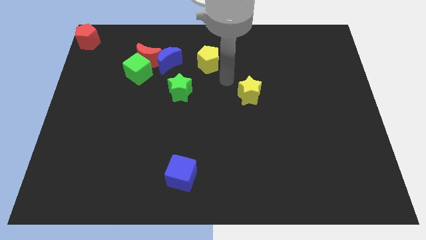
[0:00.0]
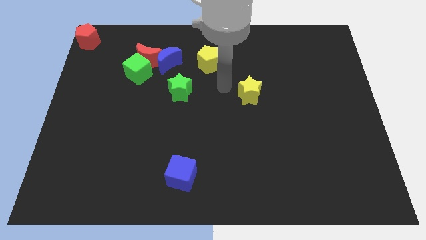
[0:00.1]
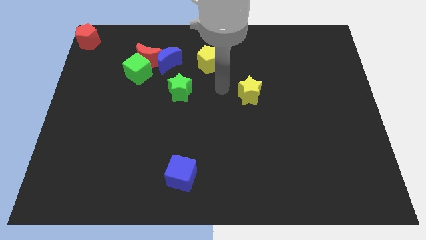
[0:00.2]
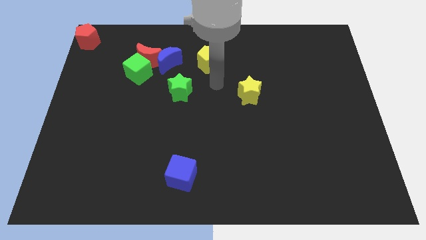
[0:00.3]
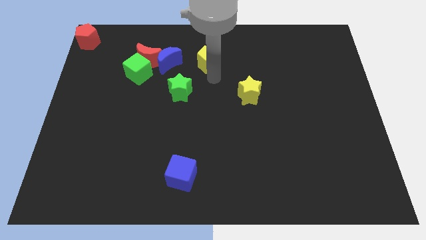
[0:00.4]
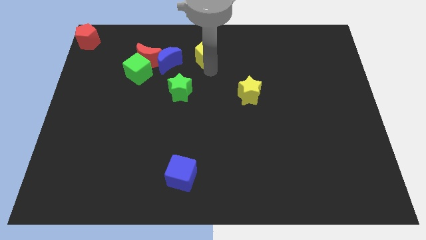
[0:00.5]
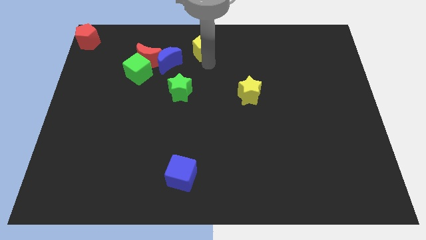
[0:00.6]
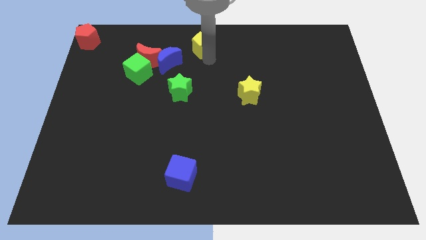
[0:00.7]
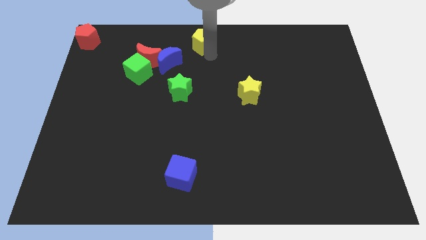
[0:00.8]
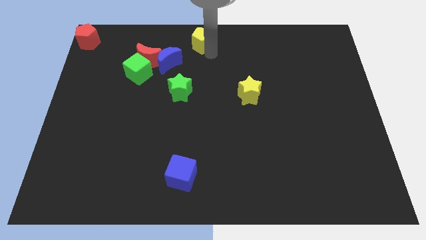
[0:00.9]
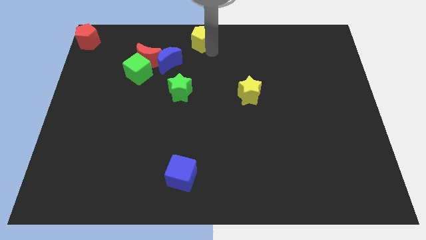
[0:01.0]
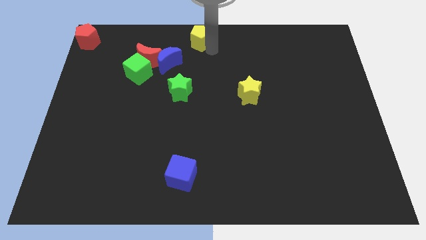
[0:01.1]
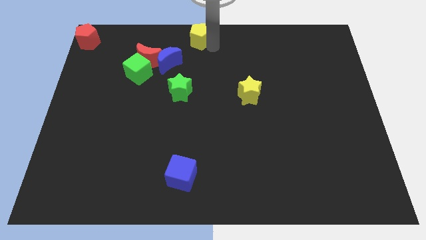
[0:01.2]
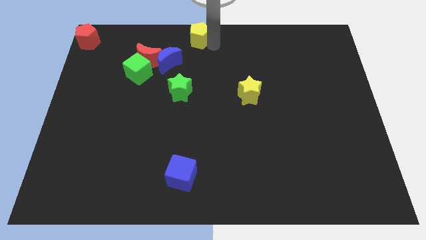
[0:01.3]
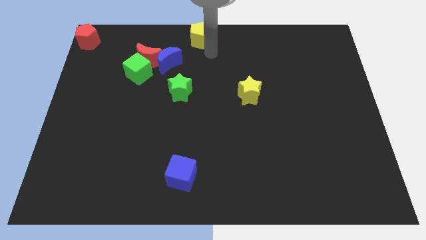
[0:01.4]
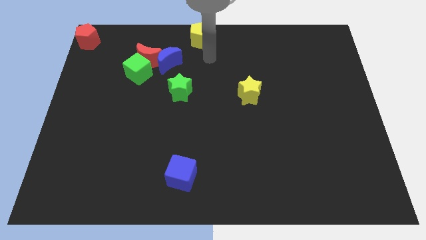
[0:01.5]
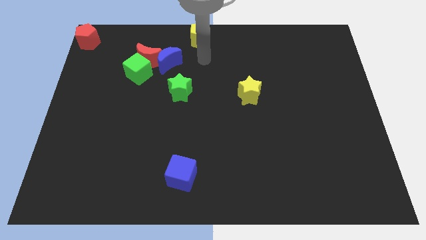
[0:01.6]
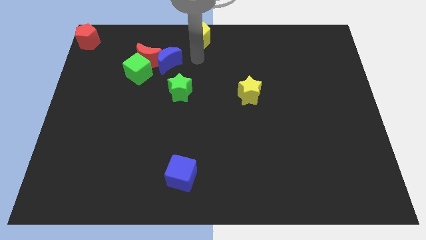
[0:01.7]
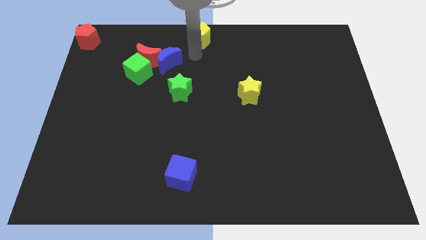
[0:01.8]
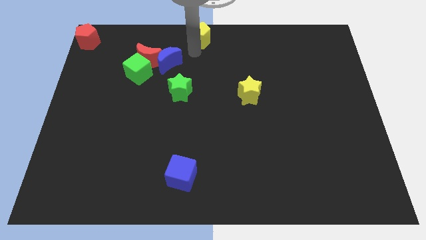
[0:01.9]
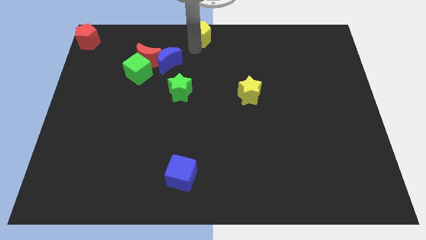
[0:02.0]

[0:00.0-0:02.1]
place yellow pentagon at the top center of the board

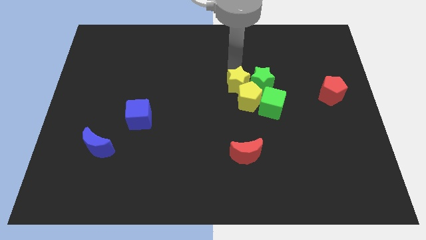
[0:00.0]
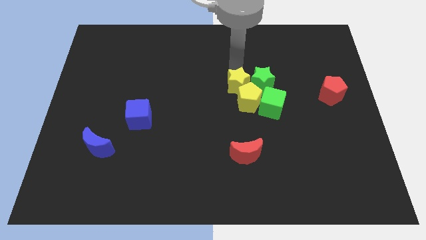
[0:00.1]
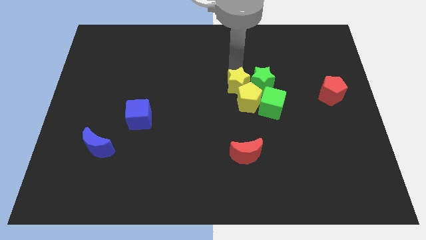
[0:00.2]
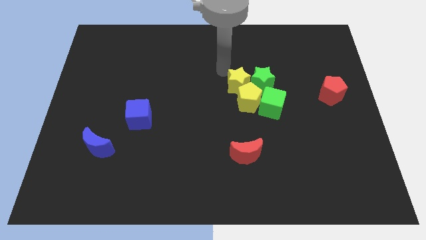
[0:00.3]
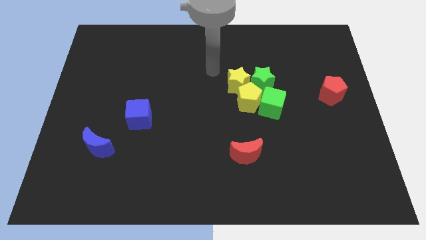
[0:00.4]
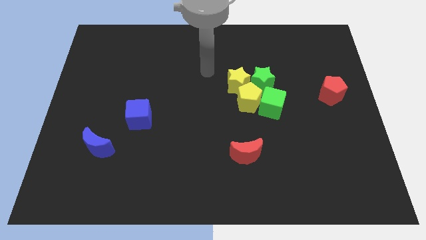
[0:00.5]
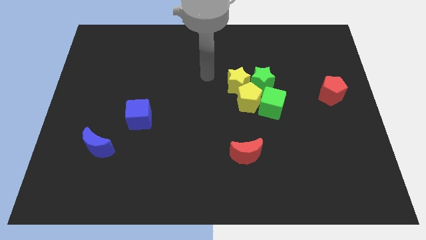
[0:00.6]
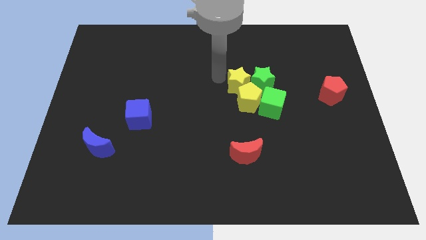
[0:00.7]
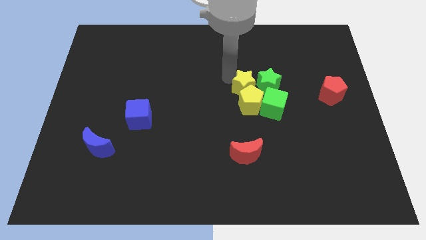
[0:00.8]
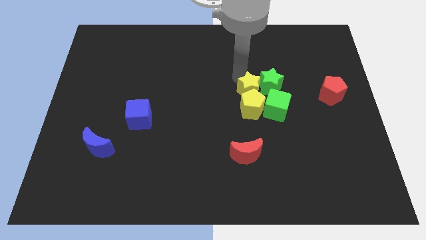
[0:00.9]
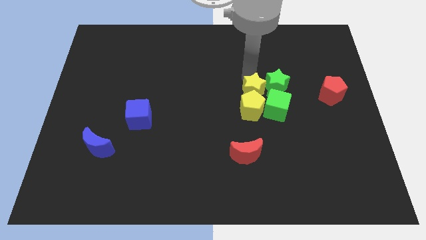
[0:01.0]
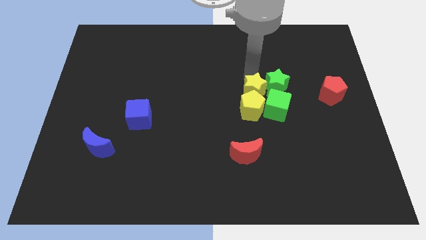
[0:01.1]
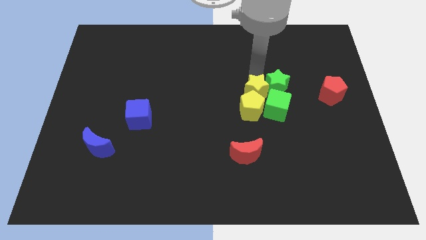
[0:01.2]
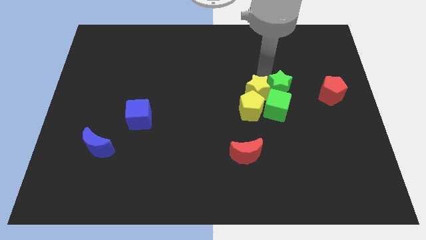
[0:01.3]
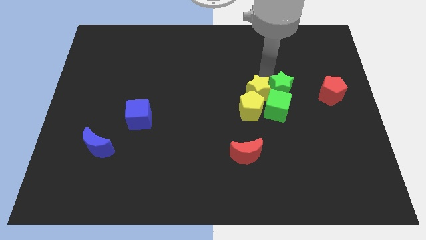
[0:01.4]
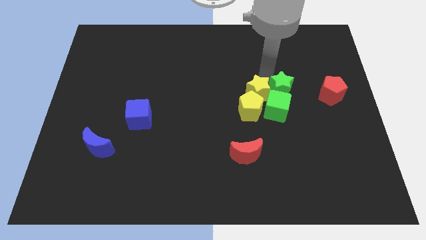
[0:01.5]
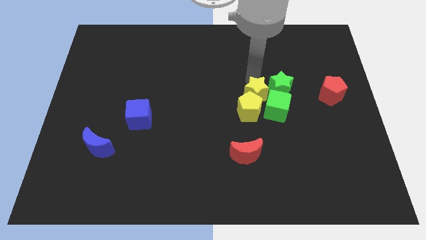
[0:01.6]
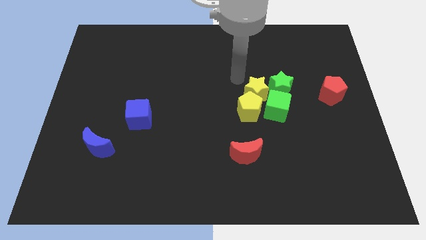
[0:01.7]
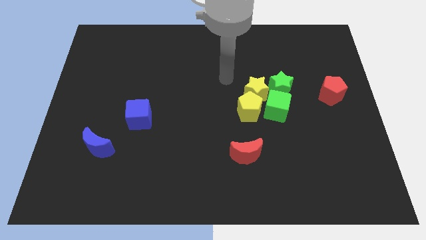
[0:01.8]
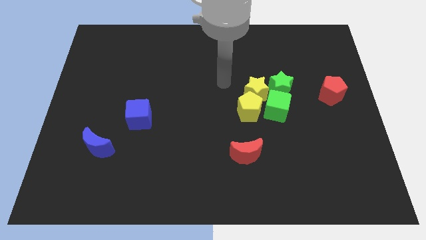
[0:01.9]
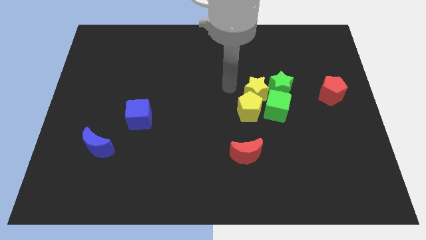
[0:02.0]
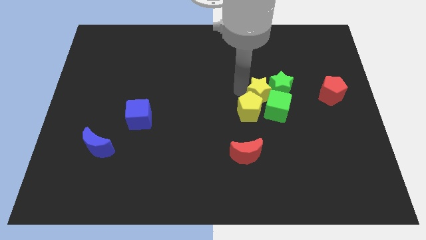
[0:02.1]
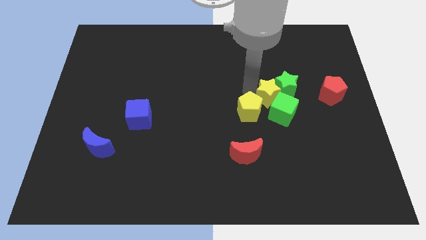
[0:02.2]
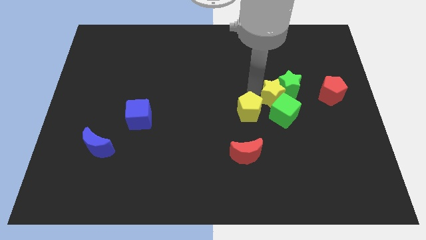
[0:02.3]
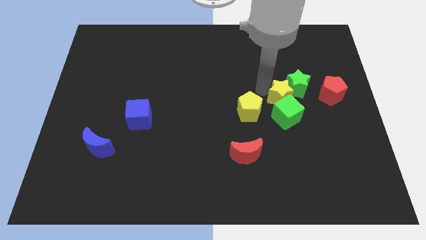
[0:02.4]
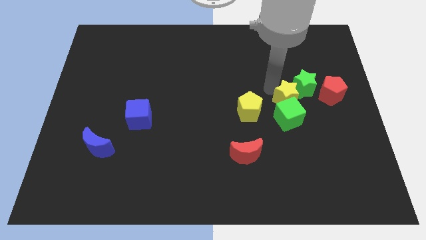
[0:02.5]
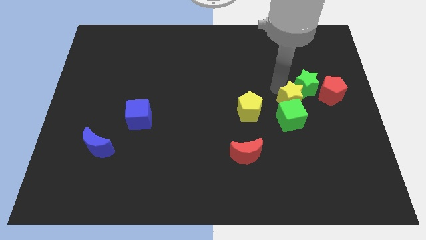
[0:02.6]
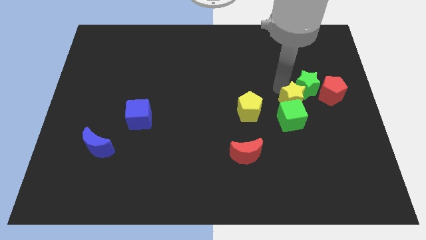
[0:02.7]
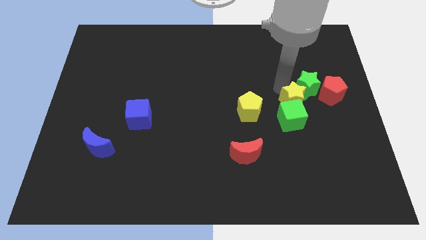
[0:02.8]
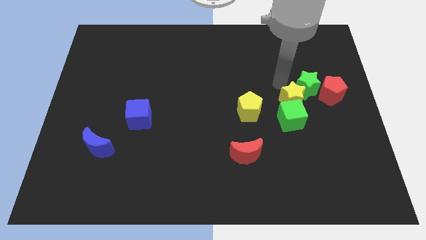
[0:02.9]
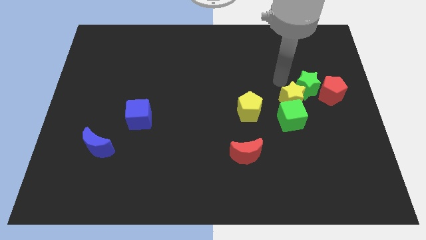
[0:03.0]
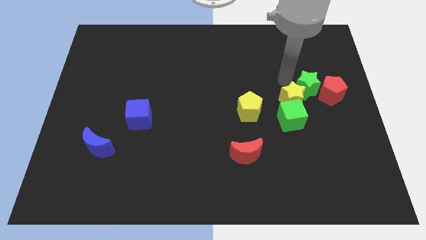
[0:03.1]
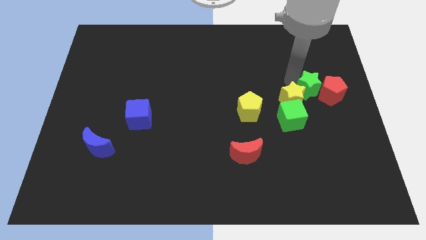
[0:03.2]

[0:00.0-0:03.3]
separate the yellow star green star and green cube from the yellow pentagon

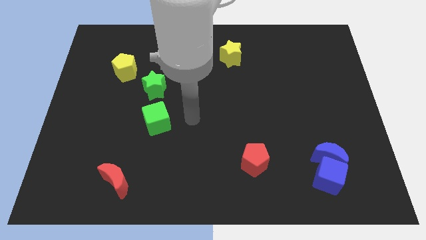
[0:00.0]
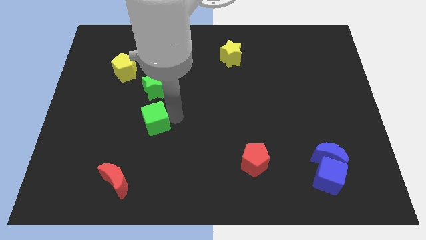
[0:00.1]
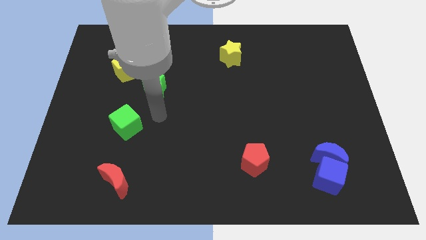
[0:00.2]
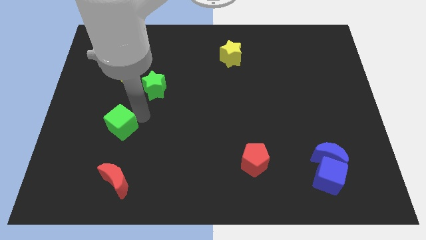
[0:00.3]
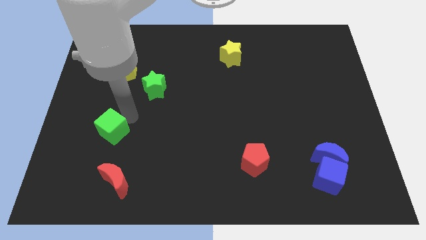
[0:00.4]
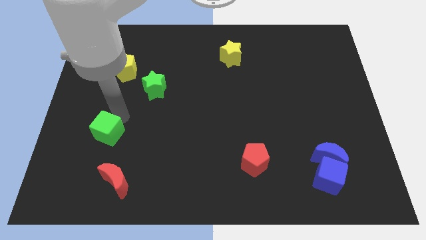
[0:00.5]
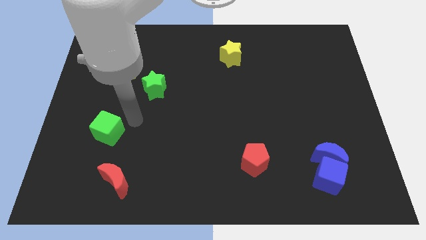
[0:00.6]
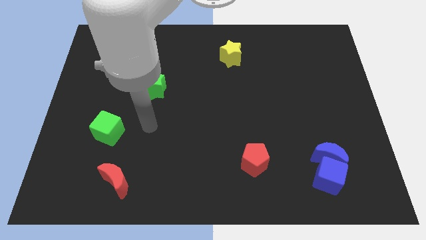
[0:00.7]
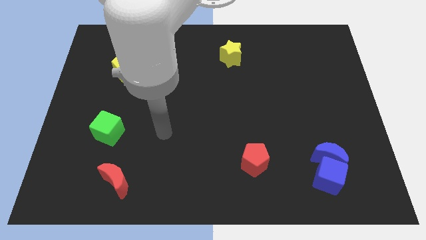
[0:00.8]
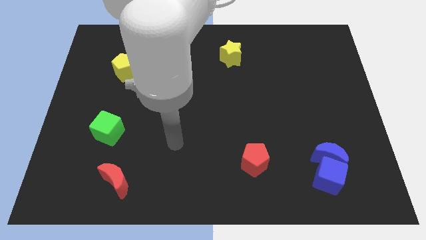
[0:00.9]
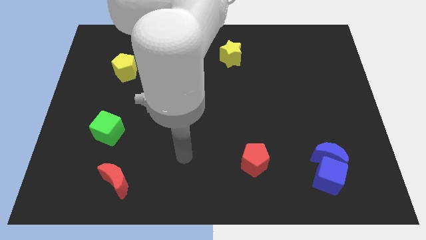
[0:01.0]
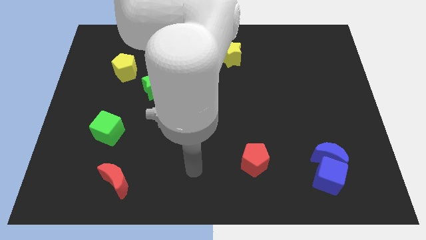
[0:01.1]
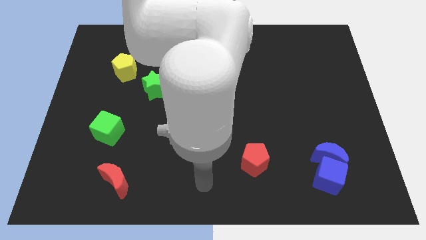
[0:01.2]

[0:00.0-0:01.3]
push the green cube to the top of the red crescent

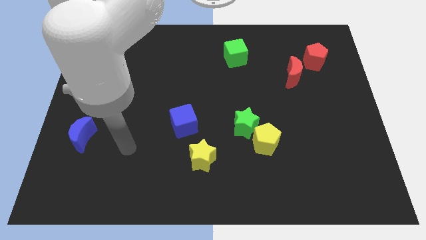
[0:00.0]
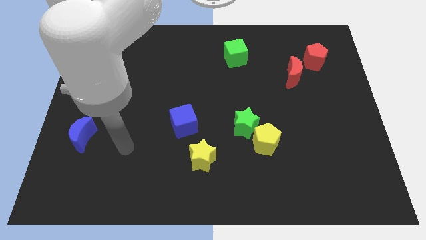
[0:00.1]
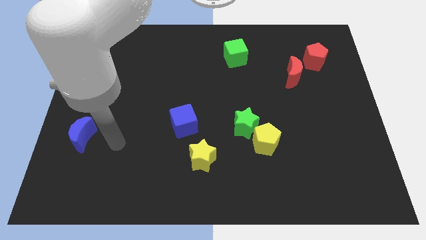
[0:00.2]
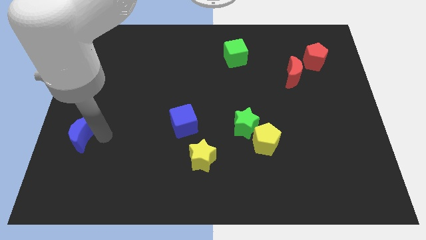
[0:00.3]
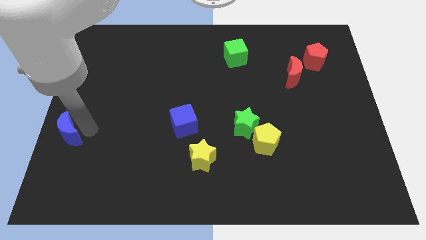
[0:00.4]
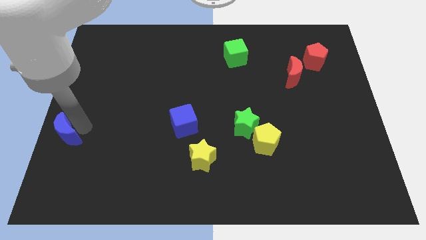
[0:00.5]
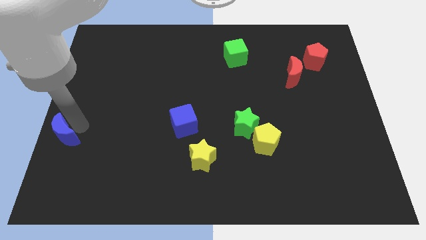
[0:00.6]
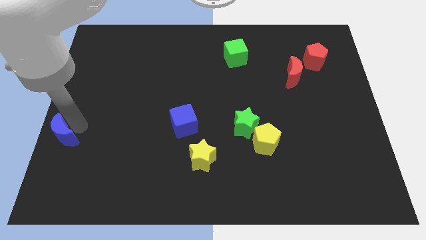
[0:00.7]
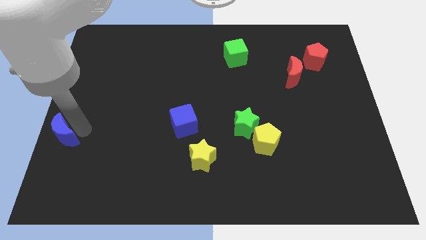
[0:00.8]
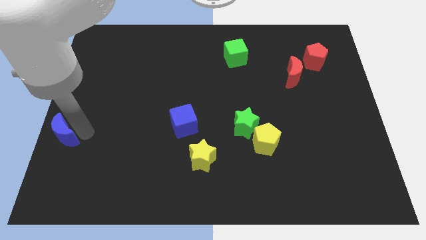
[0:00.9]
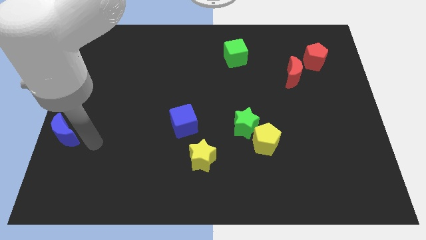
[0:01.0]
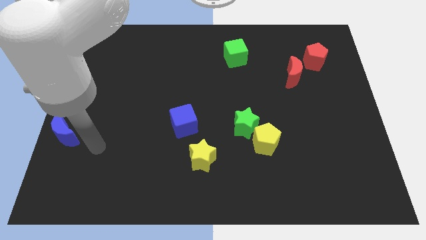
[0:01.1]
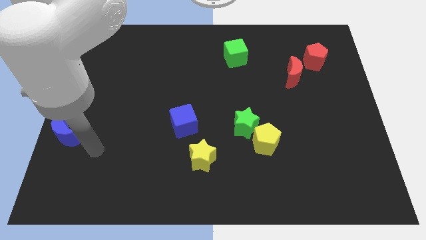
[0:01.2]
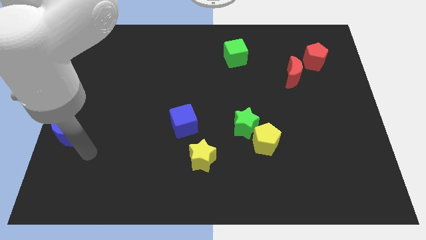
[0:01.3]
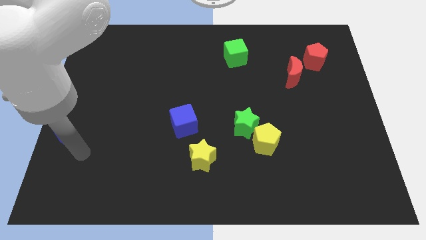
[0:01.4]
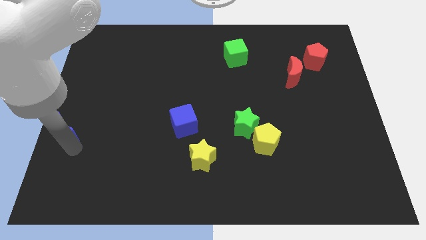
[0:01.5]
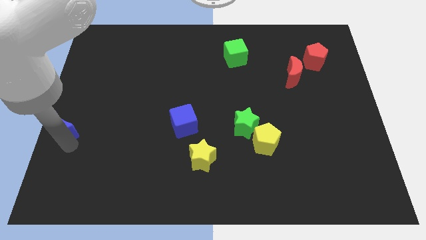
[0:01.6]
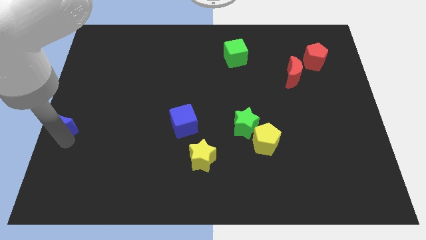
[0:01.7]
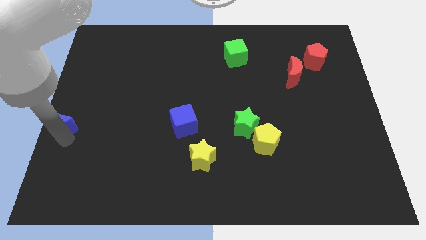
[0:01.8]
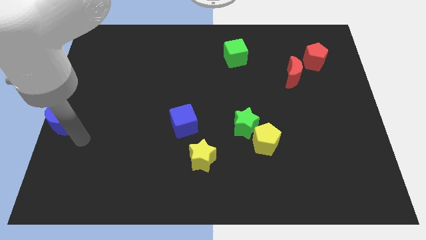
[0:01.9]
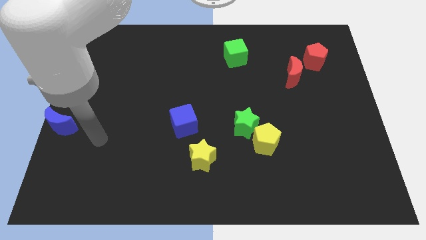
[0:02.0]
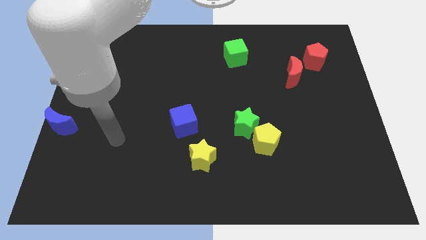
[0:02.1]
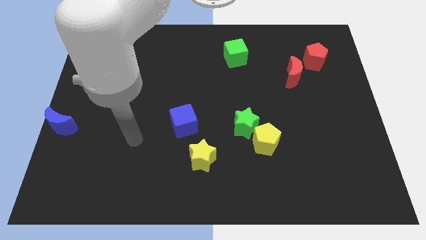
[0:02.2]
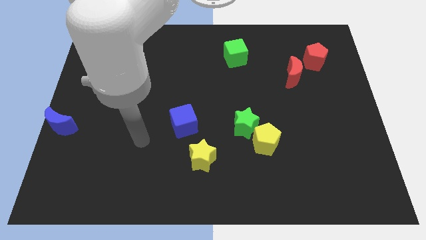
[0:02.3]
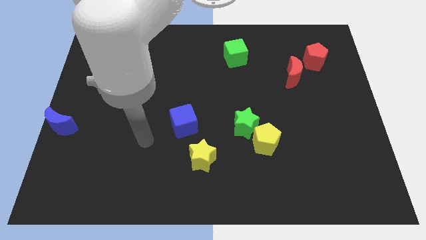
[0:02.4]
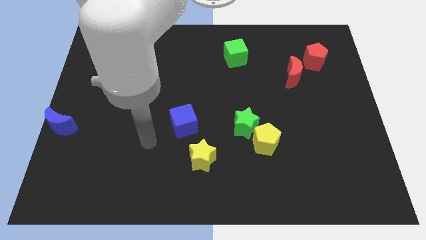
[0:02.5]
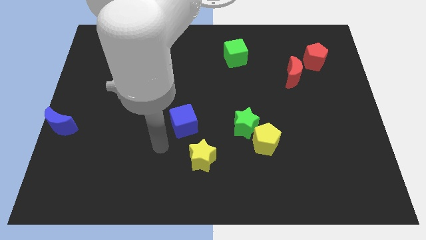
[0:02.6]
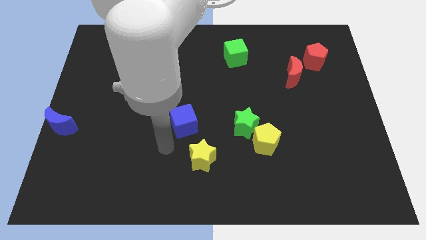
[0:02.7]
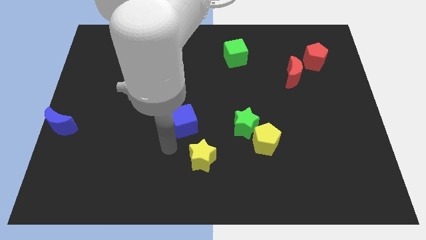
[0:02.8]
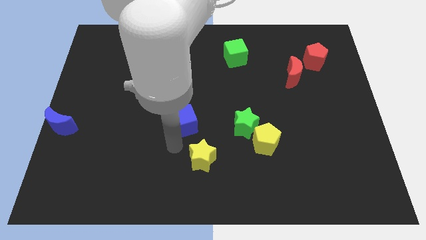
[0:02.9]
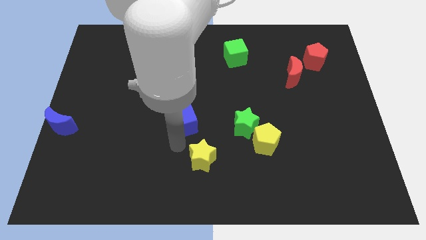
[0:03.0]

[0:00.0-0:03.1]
push the blue moon parallel to blue cube
